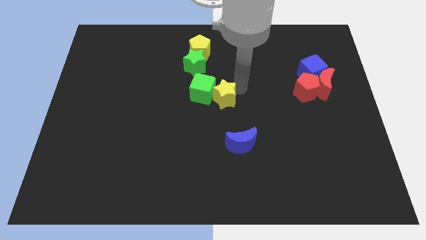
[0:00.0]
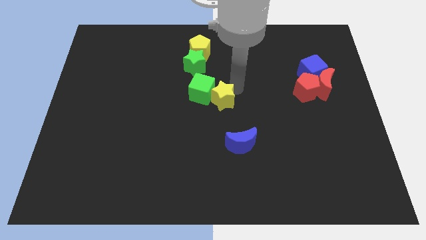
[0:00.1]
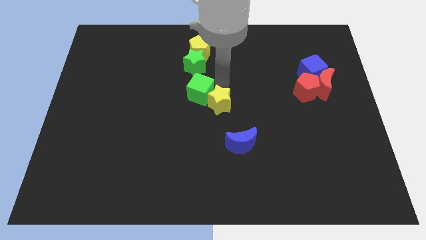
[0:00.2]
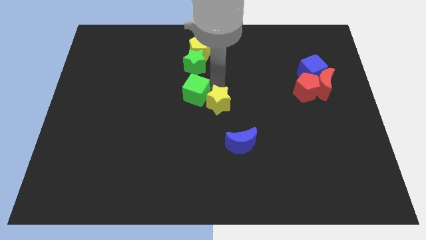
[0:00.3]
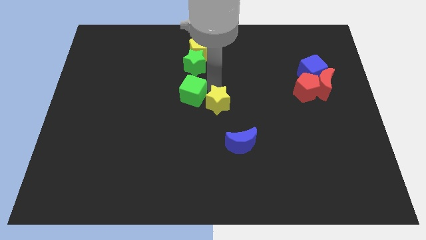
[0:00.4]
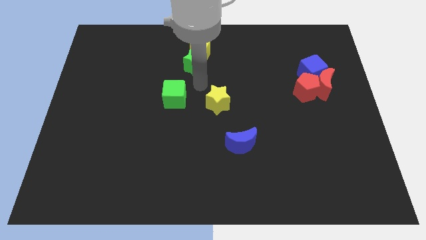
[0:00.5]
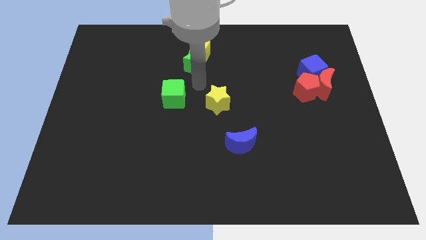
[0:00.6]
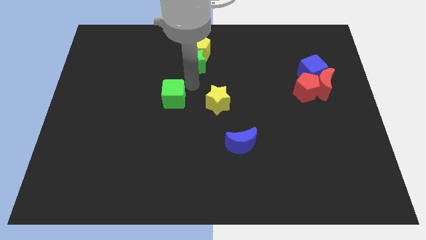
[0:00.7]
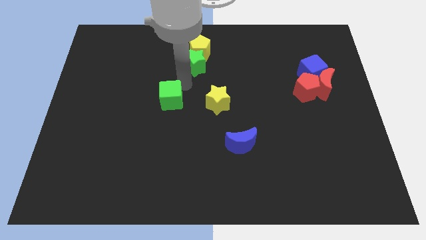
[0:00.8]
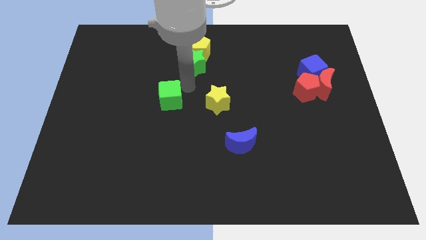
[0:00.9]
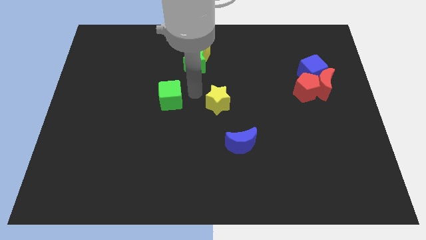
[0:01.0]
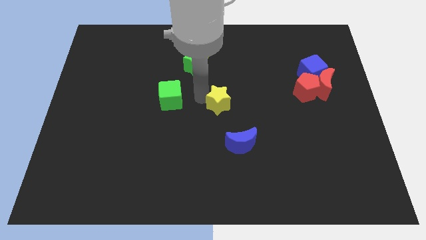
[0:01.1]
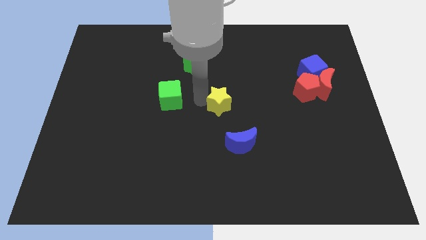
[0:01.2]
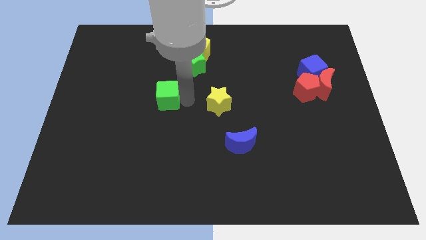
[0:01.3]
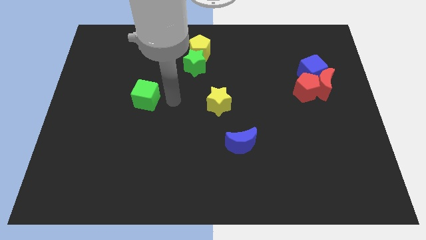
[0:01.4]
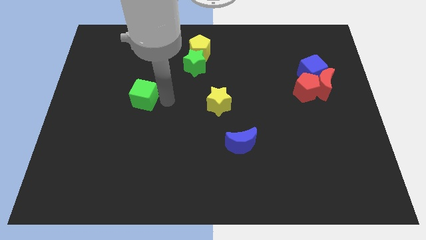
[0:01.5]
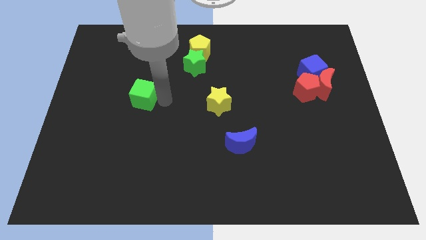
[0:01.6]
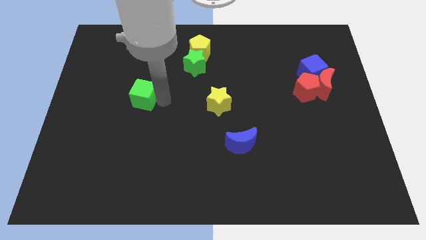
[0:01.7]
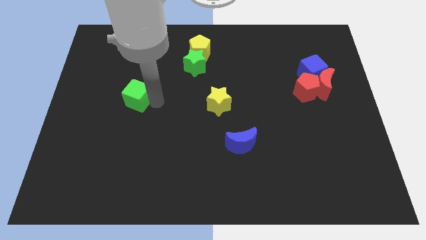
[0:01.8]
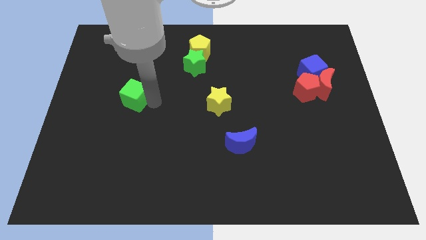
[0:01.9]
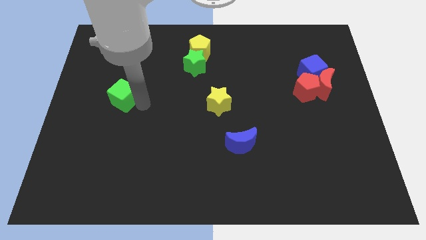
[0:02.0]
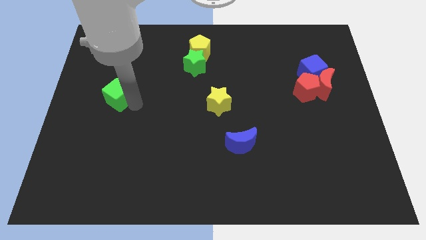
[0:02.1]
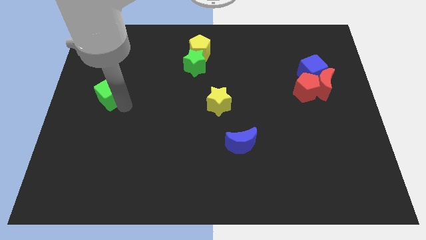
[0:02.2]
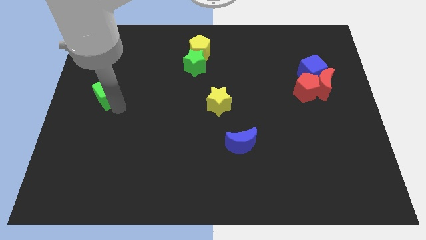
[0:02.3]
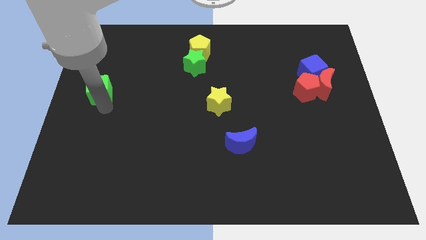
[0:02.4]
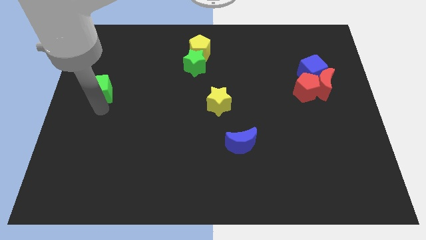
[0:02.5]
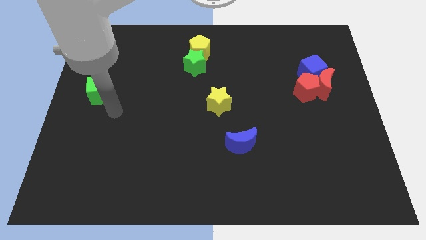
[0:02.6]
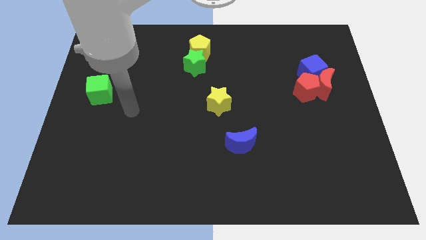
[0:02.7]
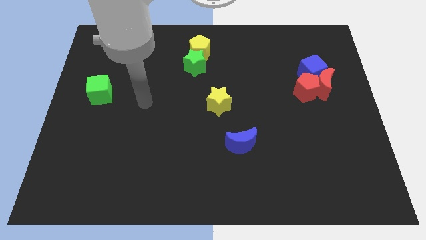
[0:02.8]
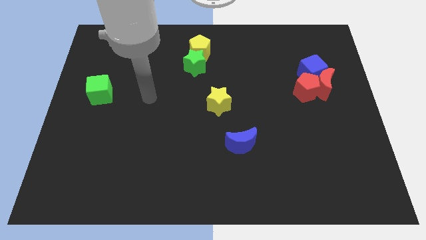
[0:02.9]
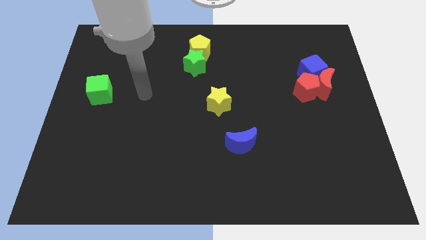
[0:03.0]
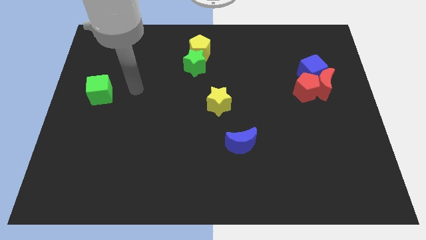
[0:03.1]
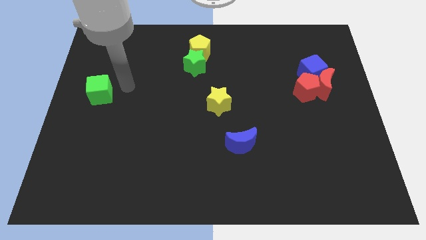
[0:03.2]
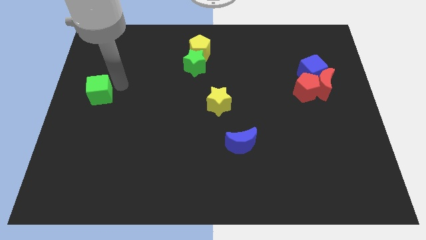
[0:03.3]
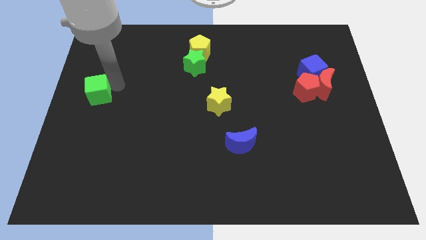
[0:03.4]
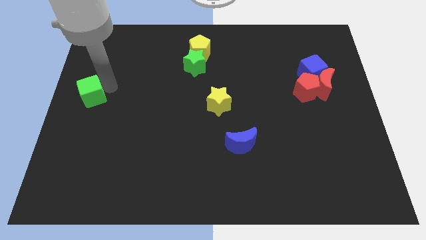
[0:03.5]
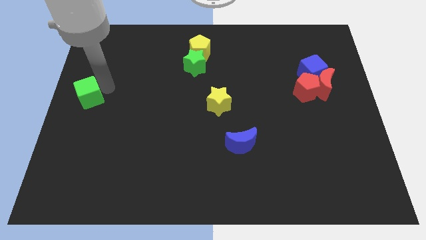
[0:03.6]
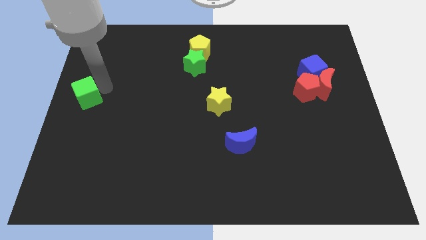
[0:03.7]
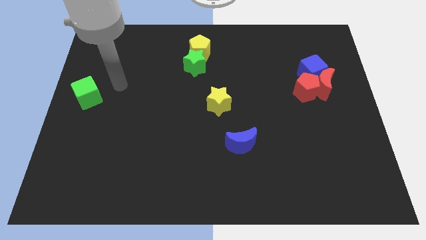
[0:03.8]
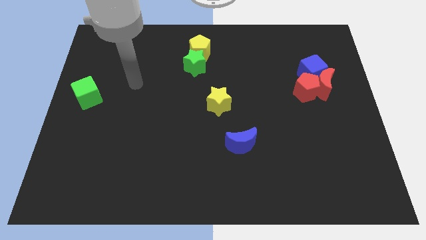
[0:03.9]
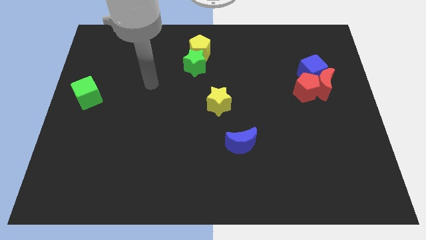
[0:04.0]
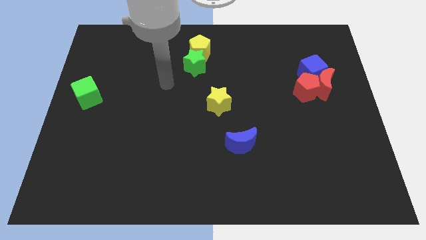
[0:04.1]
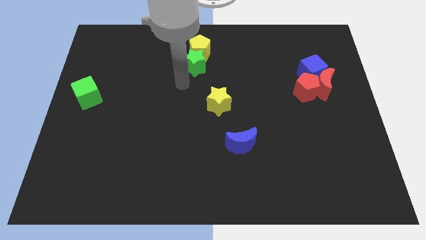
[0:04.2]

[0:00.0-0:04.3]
push green cube to the left center of the board

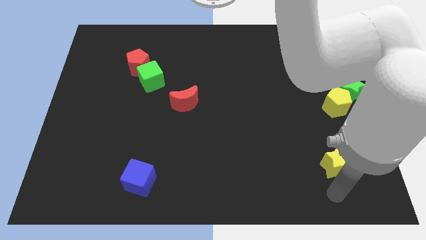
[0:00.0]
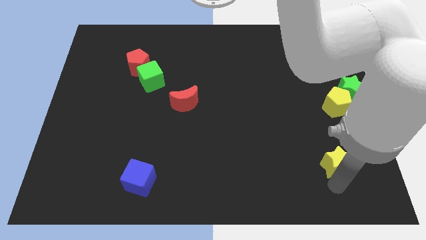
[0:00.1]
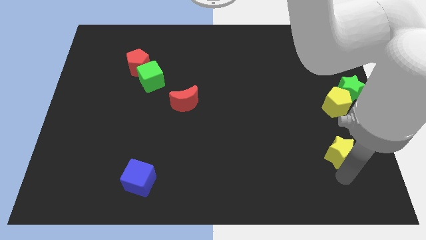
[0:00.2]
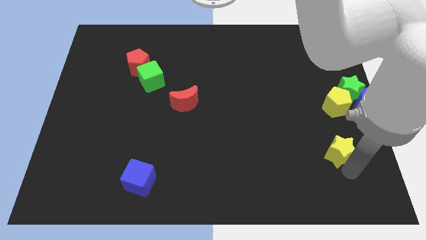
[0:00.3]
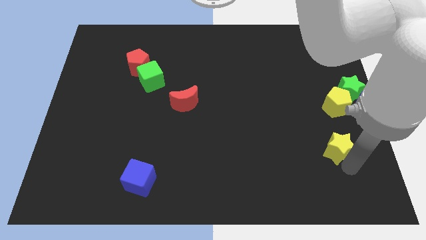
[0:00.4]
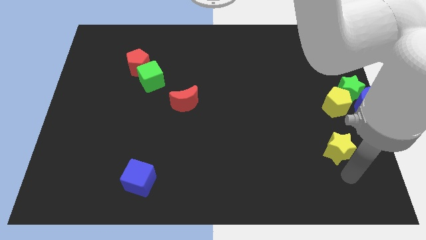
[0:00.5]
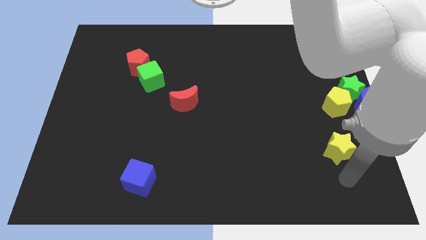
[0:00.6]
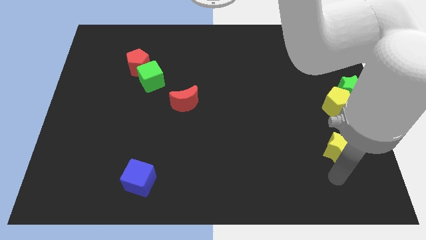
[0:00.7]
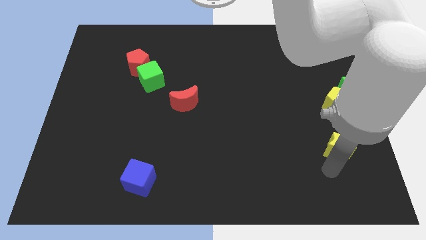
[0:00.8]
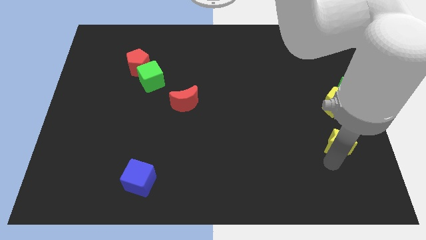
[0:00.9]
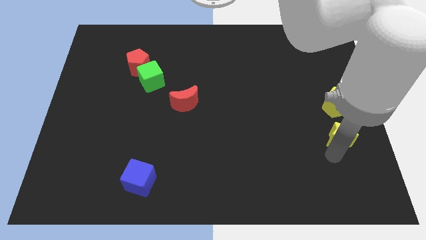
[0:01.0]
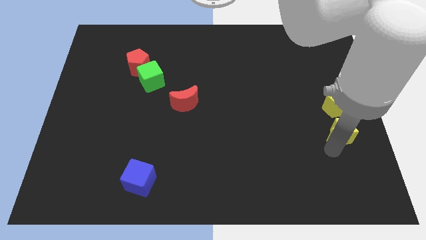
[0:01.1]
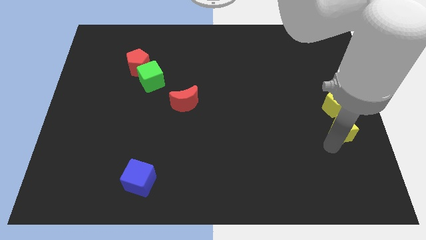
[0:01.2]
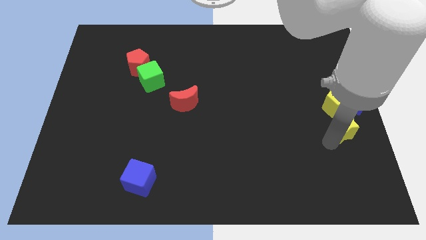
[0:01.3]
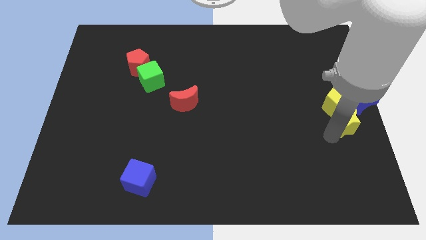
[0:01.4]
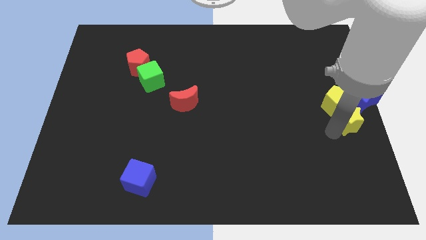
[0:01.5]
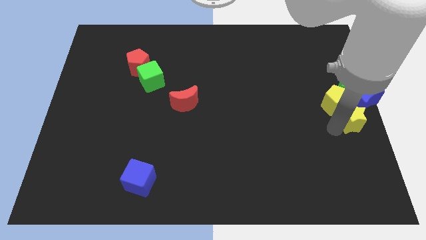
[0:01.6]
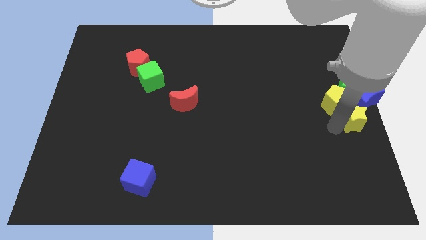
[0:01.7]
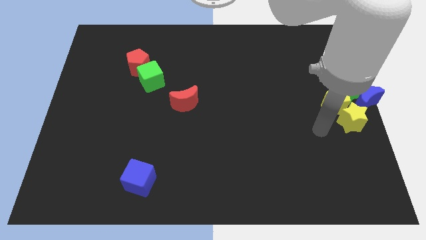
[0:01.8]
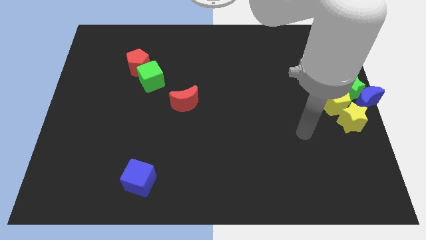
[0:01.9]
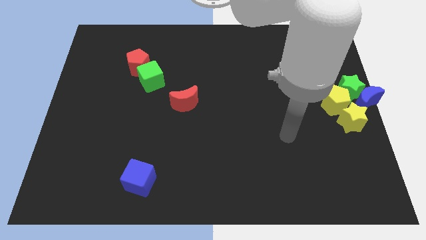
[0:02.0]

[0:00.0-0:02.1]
put the yellow star below blue moon and yellow pentagon

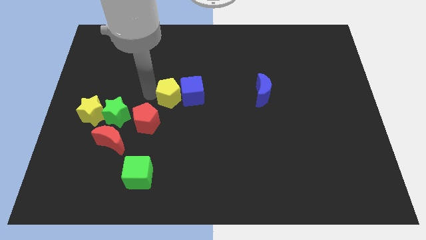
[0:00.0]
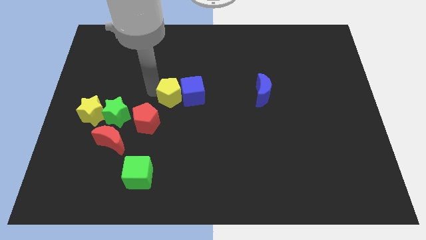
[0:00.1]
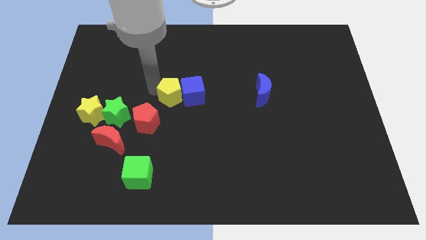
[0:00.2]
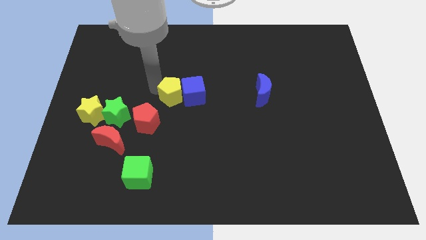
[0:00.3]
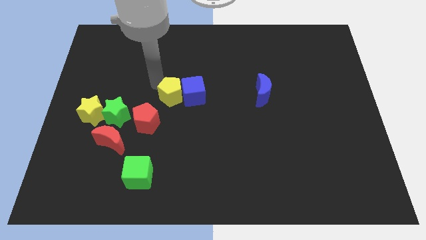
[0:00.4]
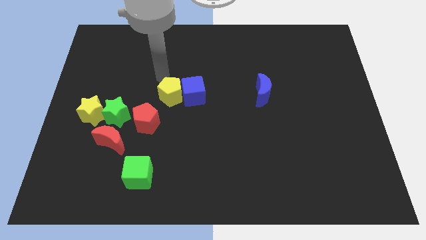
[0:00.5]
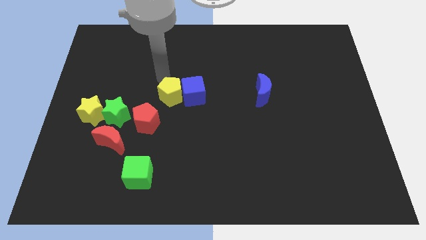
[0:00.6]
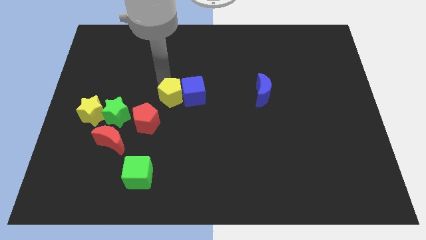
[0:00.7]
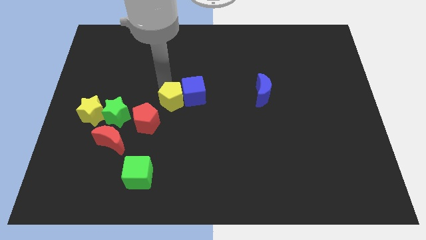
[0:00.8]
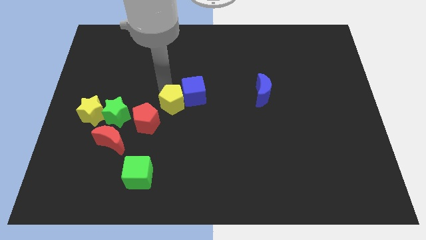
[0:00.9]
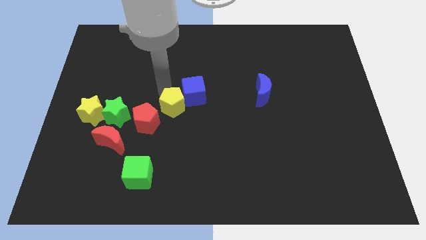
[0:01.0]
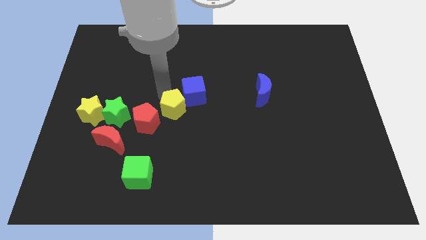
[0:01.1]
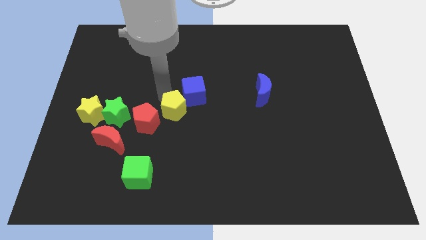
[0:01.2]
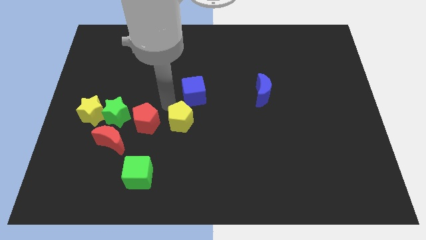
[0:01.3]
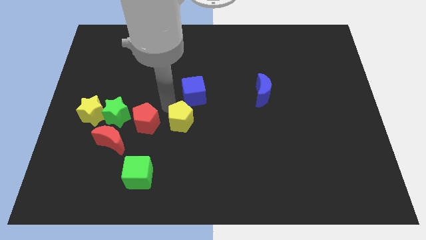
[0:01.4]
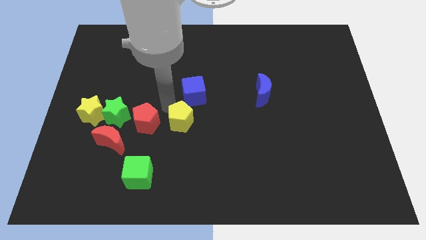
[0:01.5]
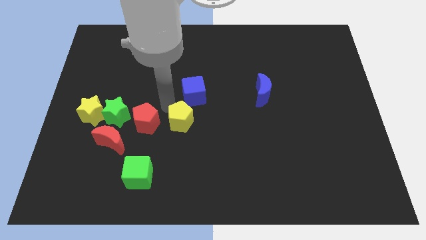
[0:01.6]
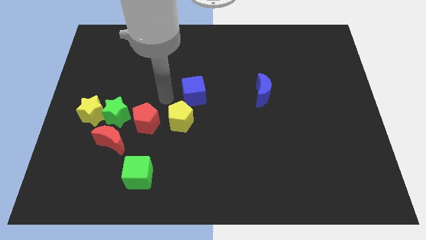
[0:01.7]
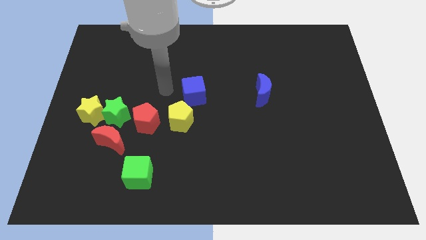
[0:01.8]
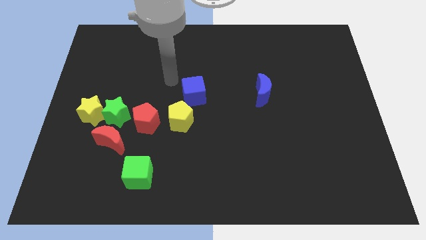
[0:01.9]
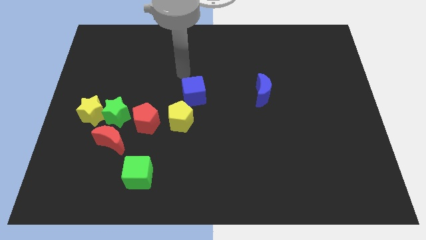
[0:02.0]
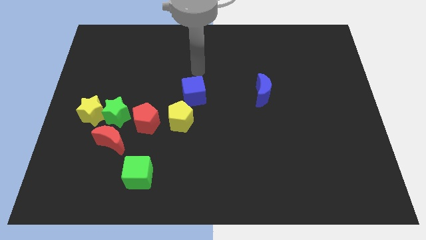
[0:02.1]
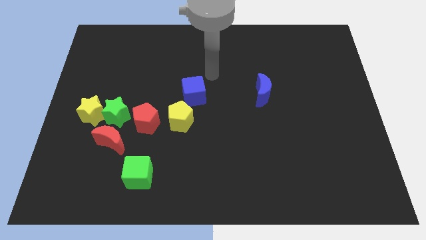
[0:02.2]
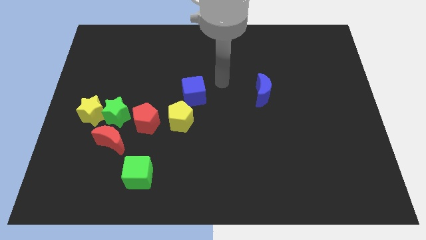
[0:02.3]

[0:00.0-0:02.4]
place the yellow pentagon to the right of the red pentagon

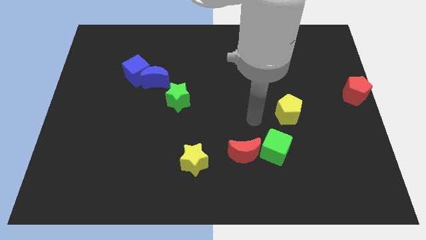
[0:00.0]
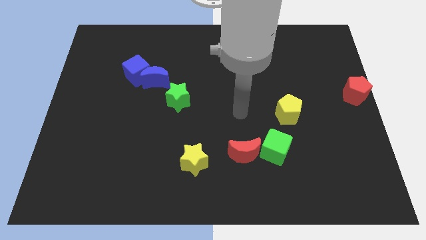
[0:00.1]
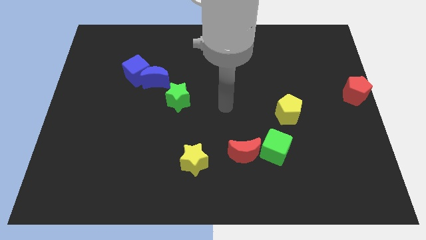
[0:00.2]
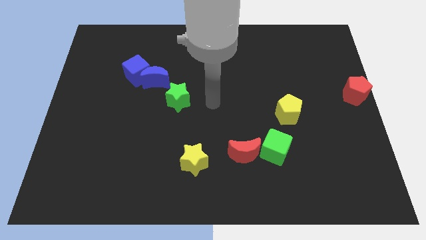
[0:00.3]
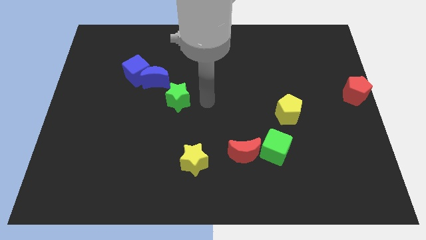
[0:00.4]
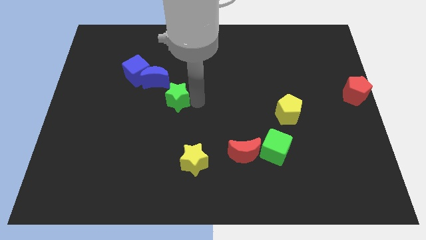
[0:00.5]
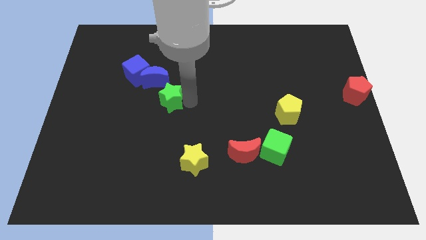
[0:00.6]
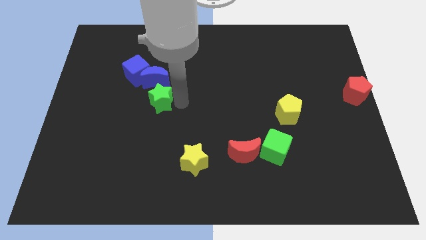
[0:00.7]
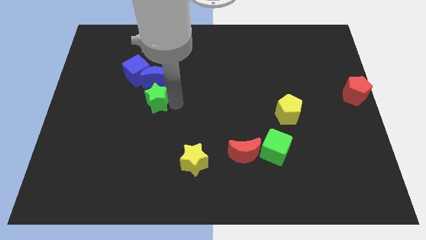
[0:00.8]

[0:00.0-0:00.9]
move the green star slightly to the left
